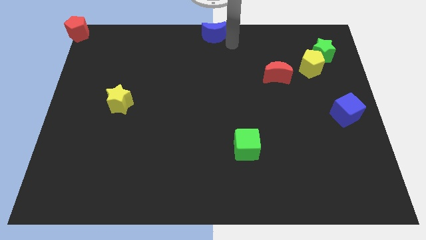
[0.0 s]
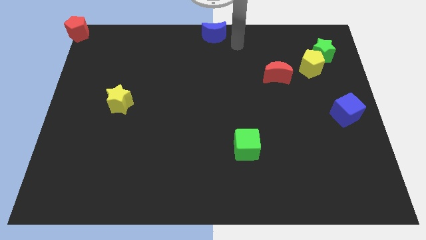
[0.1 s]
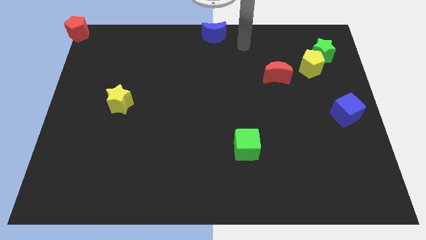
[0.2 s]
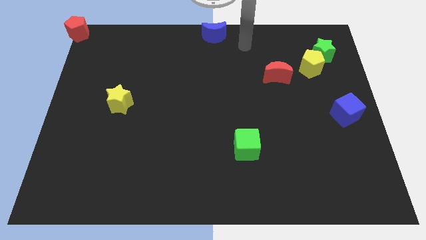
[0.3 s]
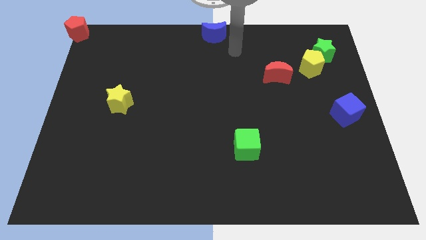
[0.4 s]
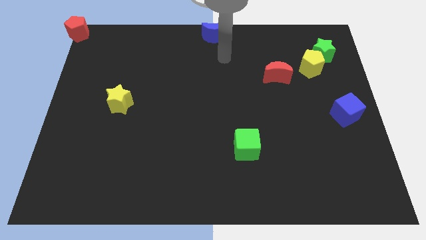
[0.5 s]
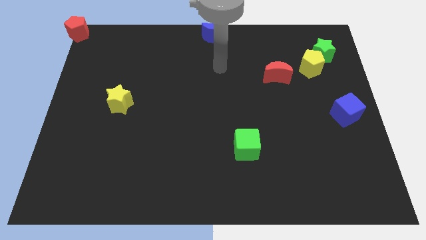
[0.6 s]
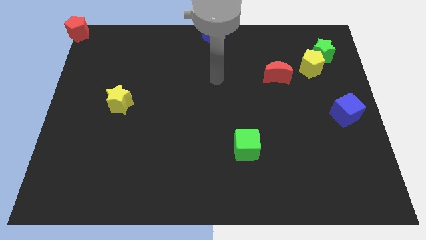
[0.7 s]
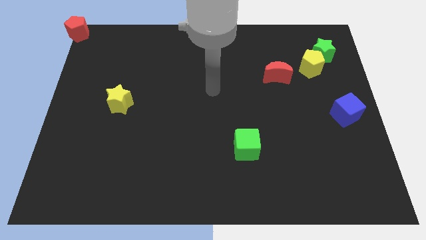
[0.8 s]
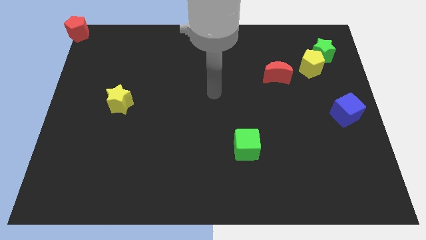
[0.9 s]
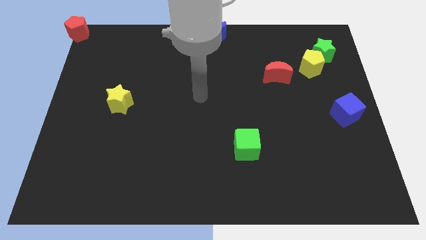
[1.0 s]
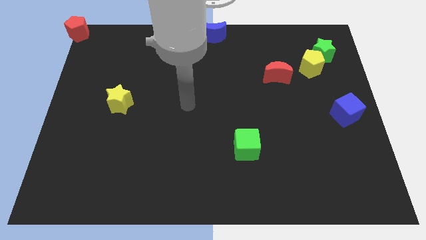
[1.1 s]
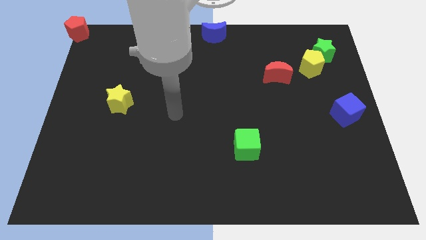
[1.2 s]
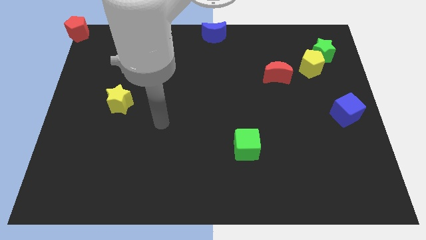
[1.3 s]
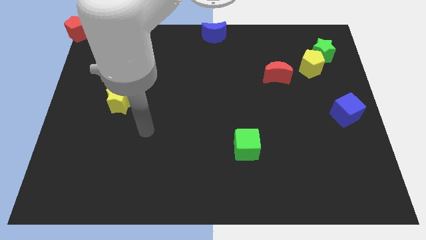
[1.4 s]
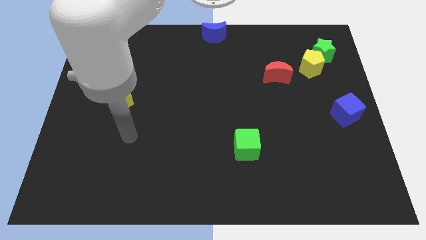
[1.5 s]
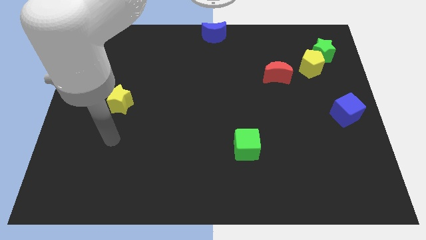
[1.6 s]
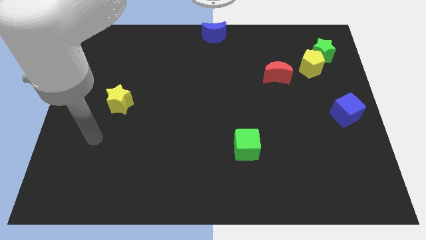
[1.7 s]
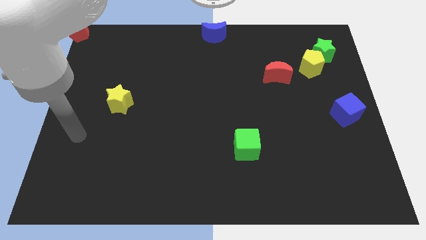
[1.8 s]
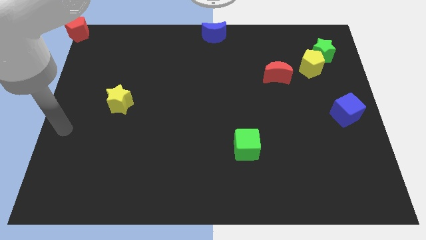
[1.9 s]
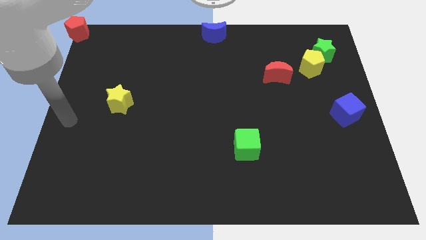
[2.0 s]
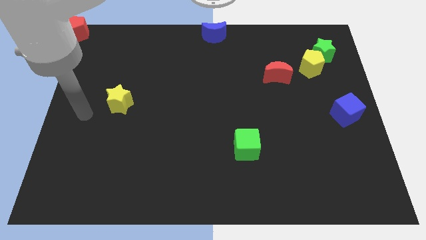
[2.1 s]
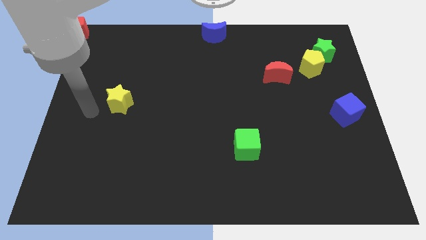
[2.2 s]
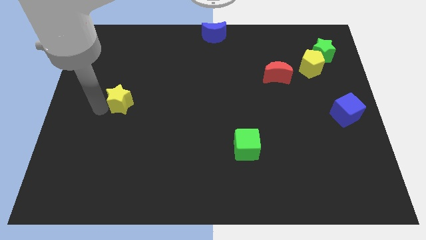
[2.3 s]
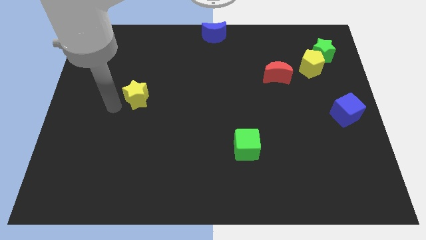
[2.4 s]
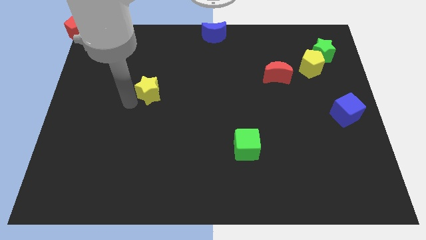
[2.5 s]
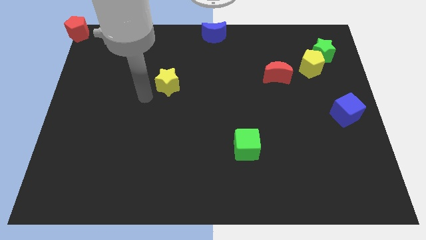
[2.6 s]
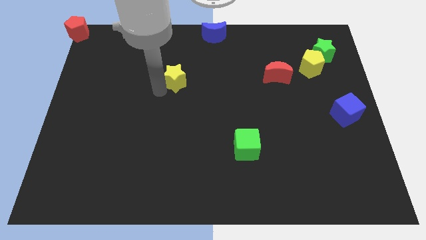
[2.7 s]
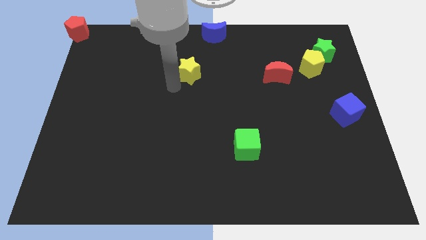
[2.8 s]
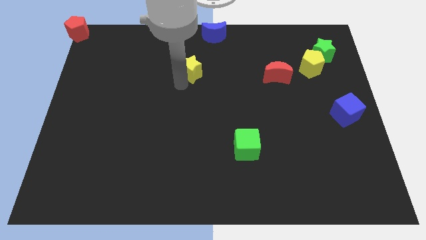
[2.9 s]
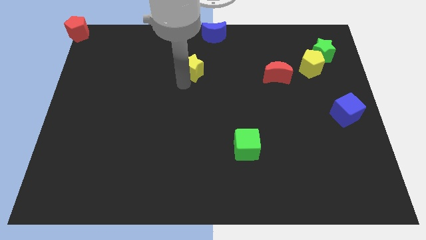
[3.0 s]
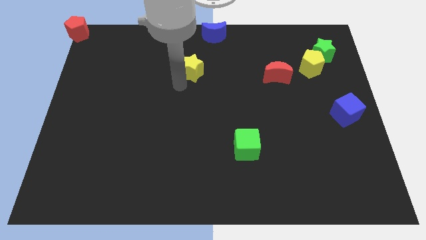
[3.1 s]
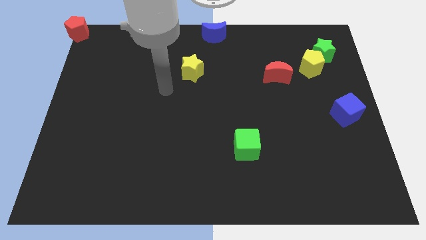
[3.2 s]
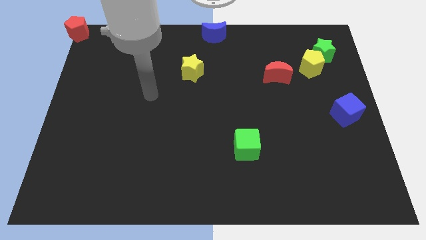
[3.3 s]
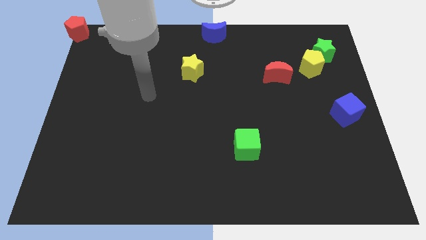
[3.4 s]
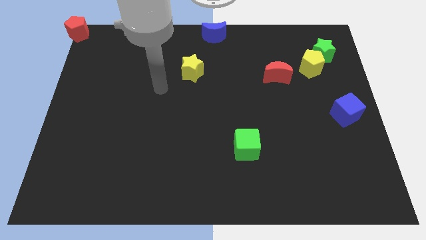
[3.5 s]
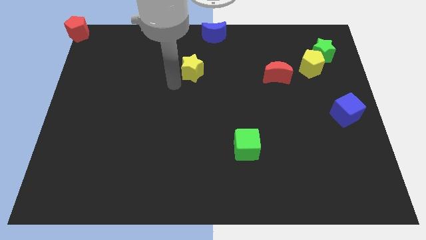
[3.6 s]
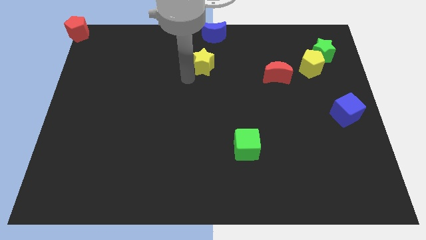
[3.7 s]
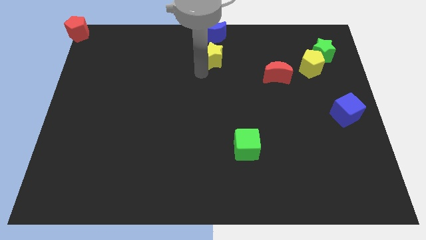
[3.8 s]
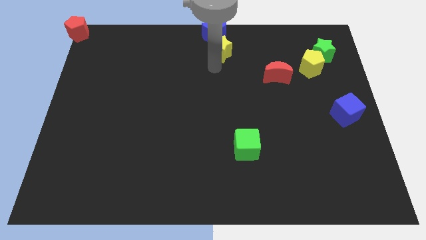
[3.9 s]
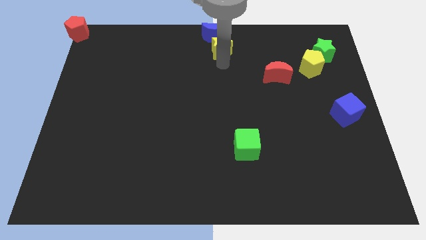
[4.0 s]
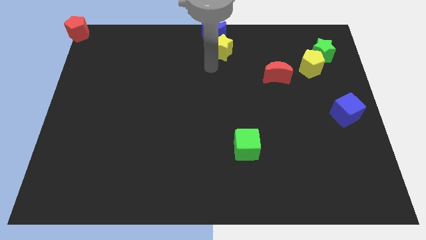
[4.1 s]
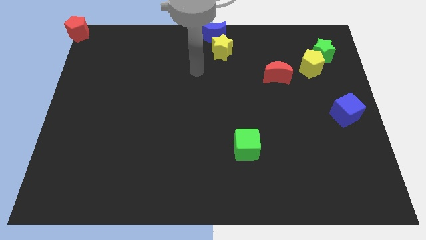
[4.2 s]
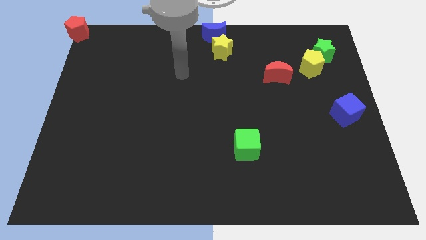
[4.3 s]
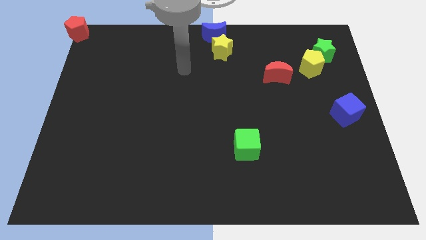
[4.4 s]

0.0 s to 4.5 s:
move yellow star below blue moon

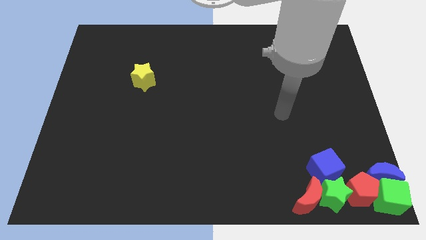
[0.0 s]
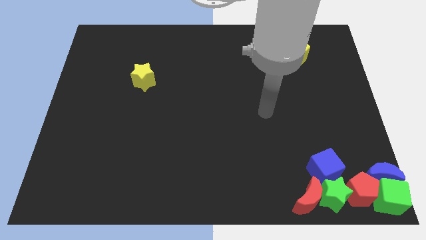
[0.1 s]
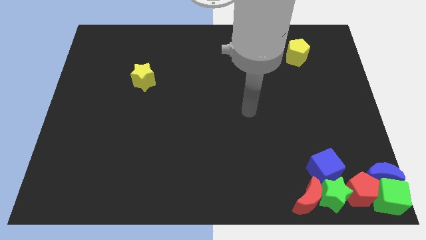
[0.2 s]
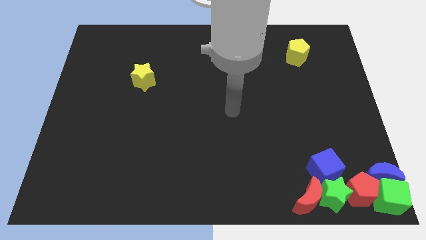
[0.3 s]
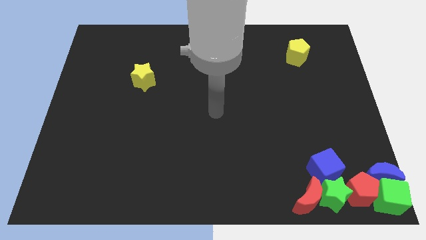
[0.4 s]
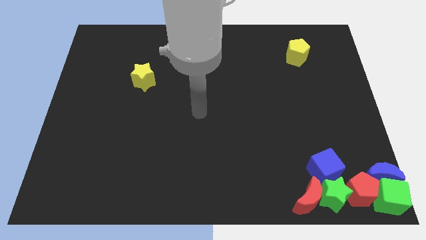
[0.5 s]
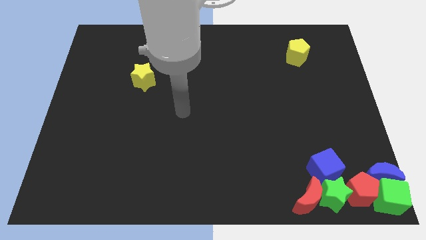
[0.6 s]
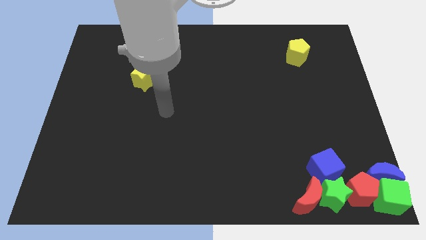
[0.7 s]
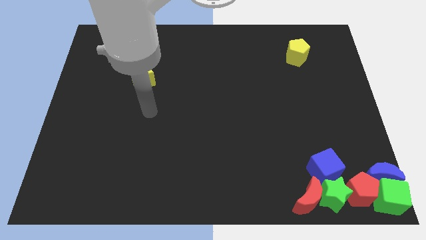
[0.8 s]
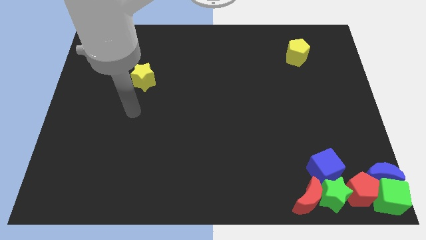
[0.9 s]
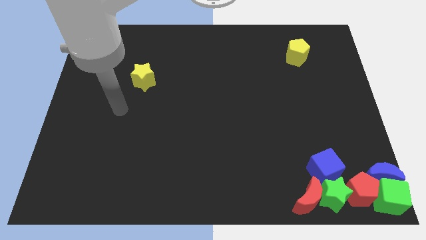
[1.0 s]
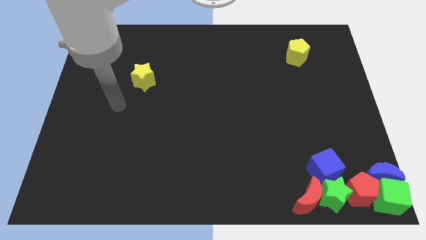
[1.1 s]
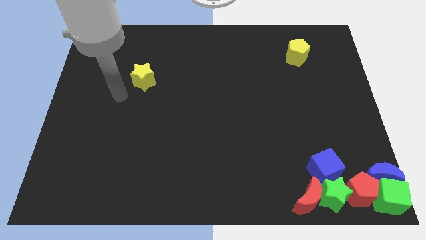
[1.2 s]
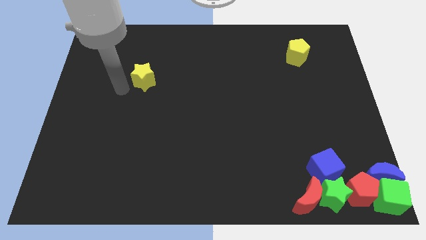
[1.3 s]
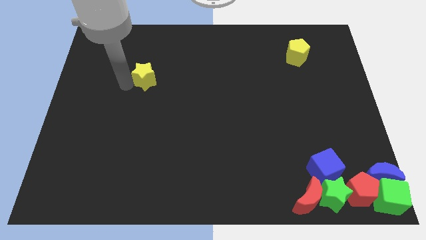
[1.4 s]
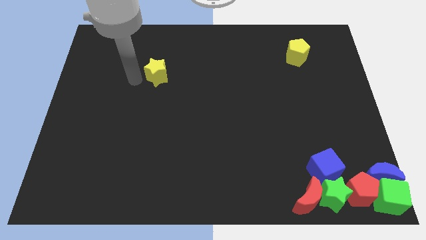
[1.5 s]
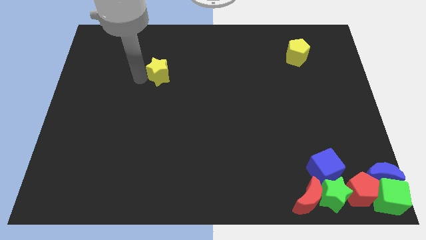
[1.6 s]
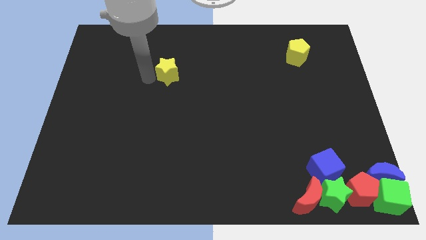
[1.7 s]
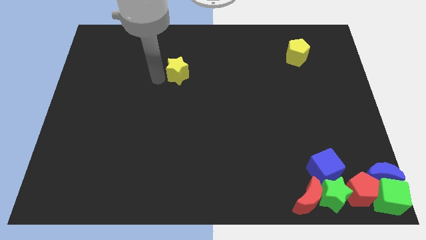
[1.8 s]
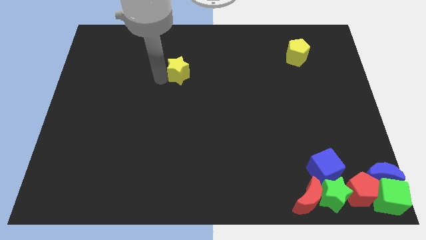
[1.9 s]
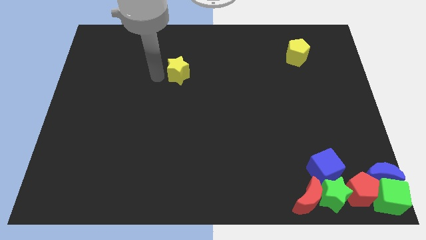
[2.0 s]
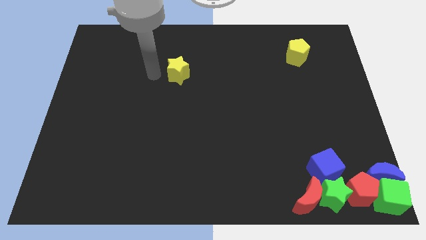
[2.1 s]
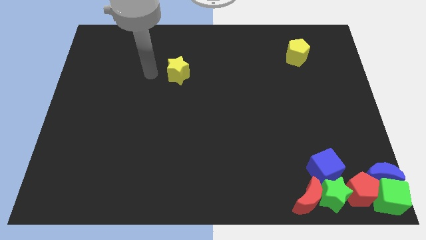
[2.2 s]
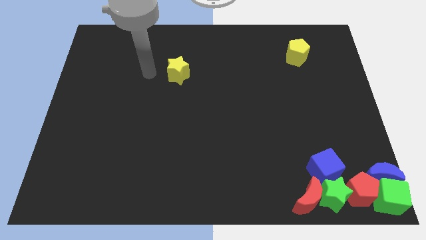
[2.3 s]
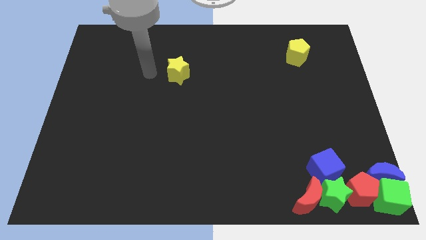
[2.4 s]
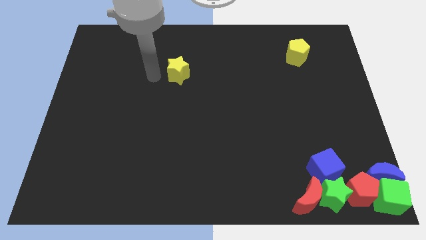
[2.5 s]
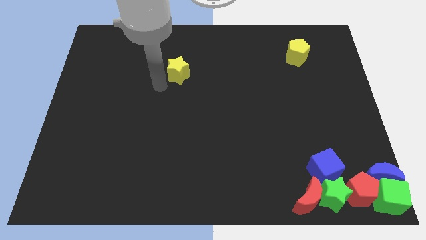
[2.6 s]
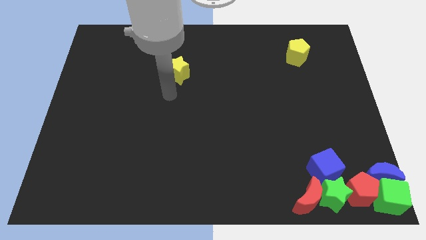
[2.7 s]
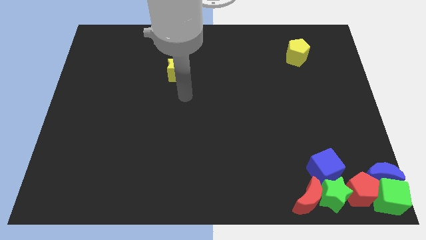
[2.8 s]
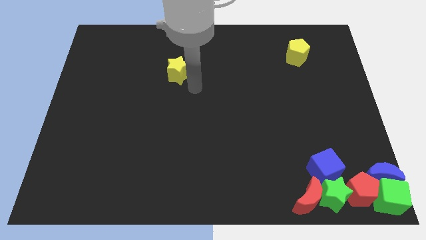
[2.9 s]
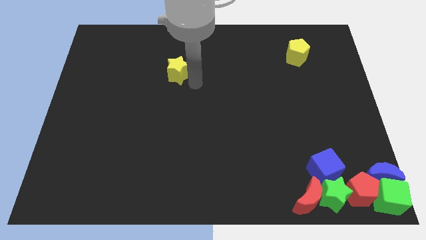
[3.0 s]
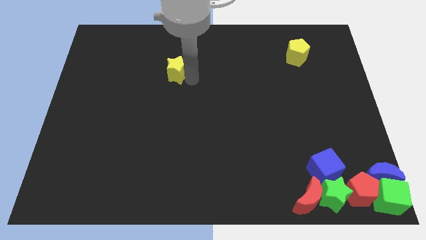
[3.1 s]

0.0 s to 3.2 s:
slide the yellow star diagonally to the yellow pentagon

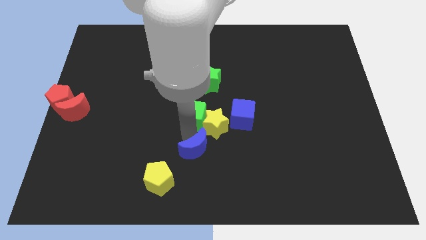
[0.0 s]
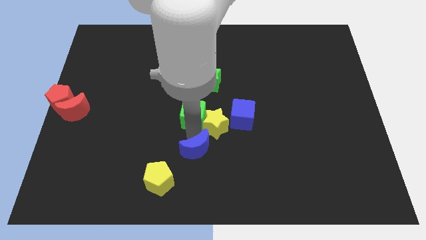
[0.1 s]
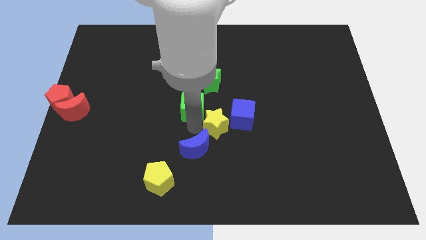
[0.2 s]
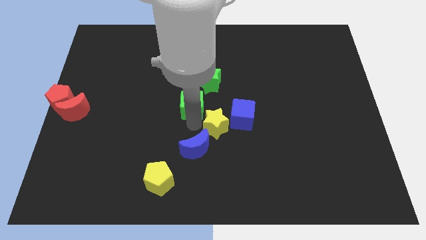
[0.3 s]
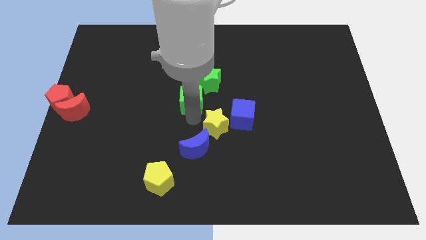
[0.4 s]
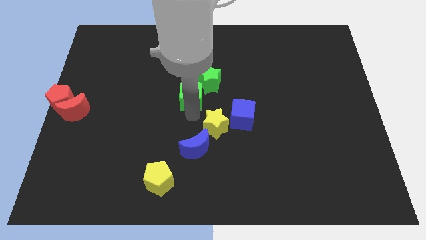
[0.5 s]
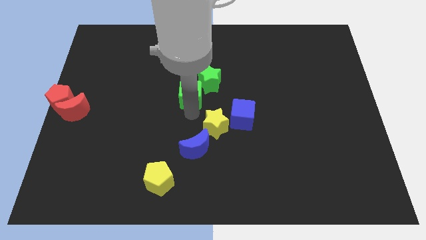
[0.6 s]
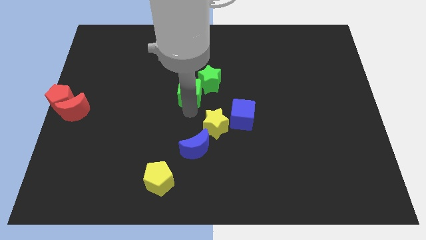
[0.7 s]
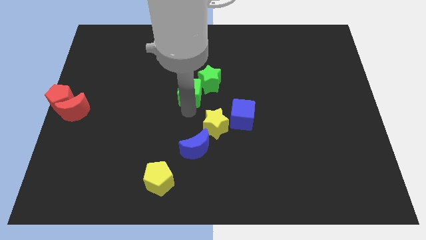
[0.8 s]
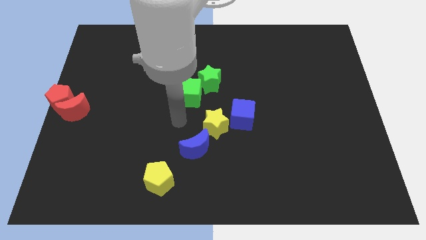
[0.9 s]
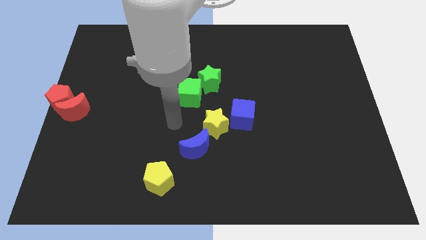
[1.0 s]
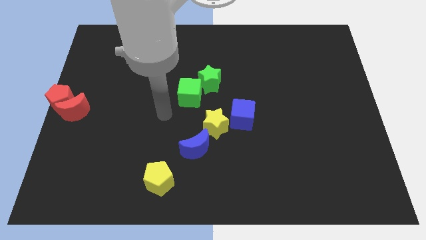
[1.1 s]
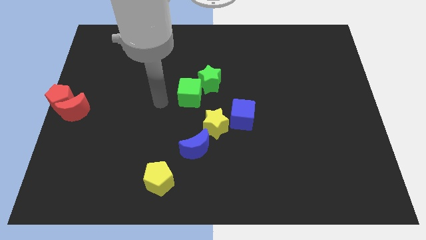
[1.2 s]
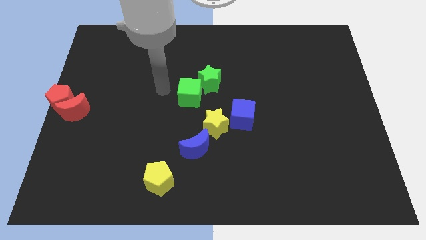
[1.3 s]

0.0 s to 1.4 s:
move the green cube into the green star

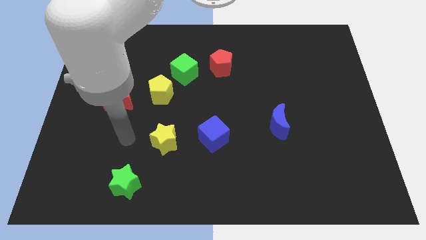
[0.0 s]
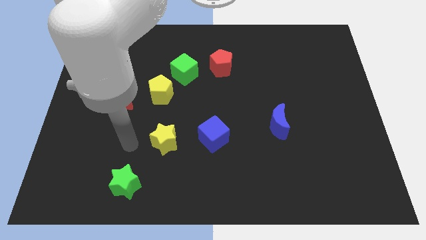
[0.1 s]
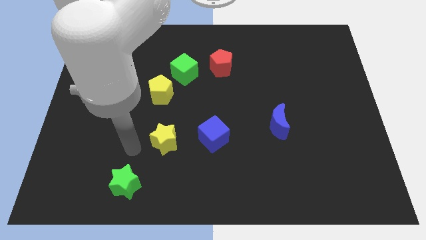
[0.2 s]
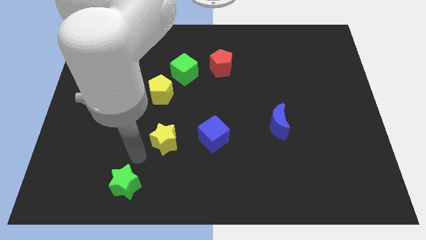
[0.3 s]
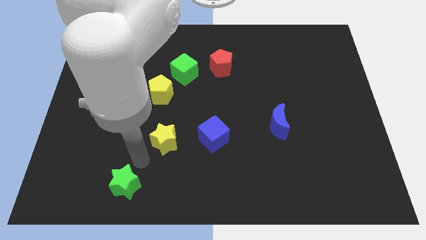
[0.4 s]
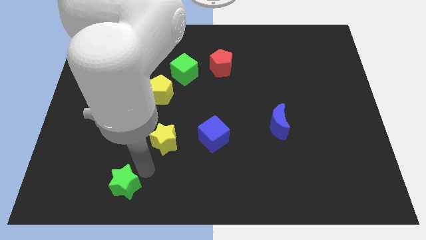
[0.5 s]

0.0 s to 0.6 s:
place arm in between yellow star and green star
